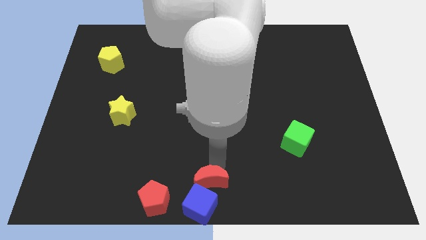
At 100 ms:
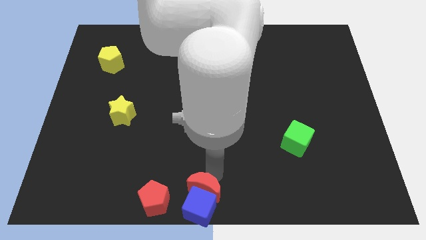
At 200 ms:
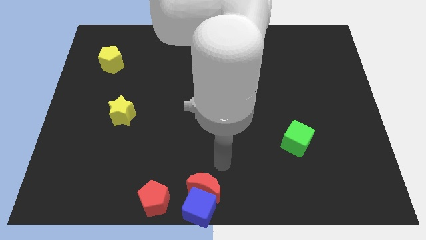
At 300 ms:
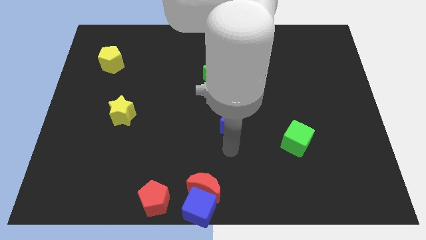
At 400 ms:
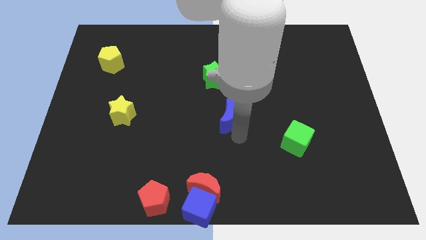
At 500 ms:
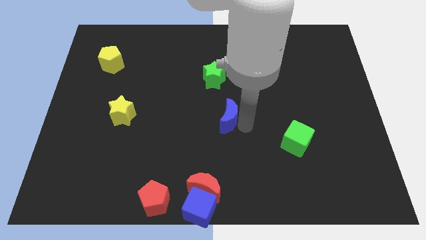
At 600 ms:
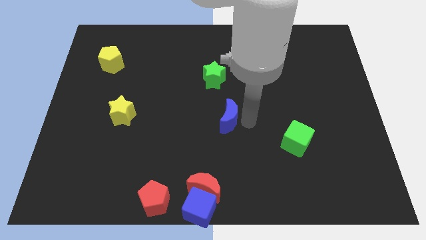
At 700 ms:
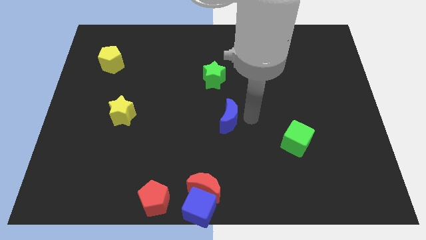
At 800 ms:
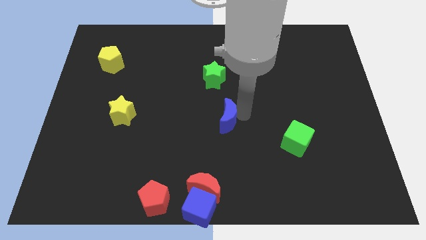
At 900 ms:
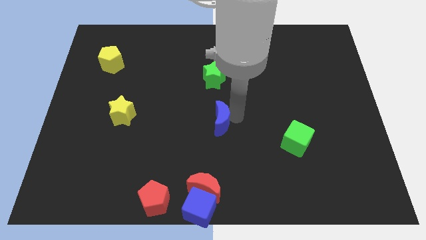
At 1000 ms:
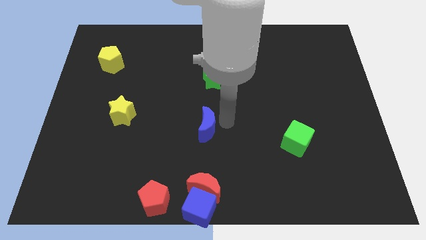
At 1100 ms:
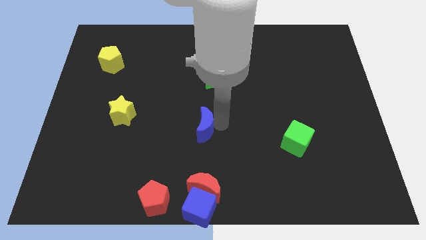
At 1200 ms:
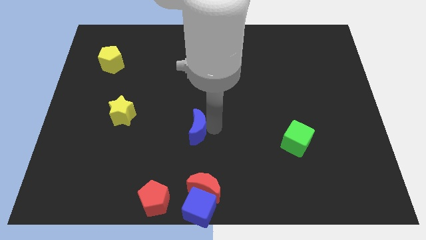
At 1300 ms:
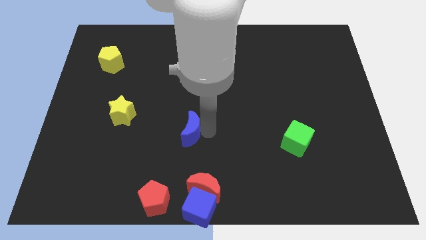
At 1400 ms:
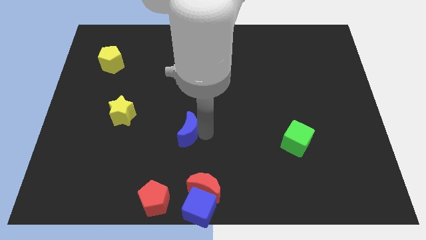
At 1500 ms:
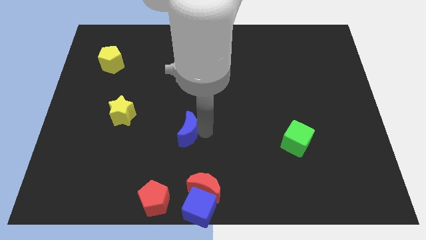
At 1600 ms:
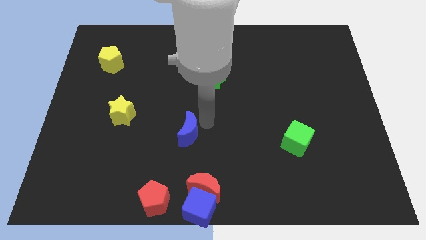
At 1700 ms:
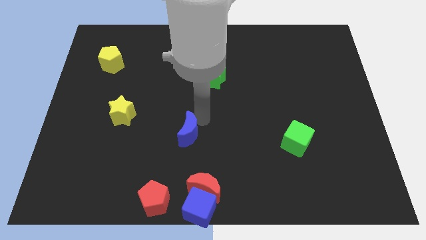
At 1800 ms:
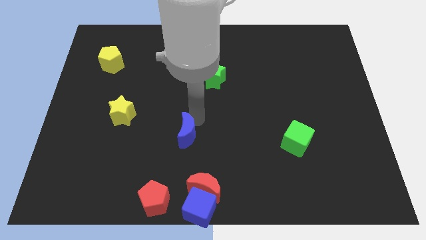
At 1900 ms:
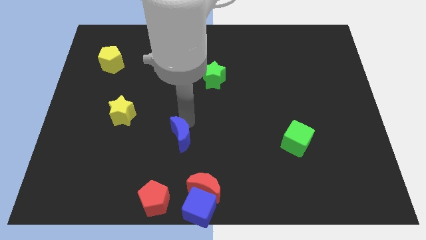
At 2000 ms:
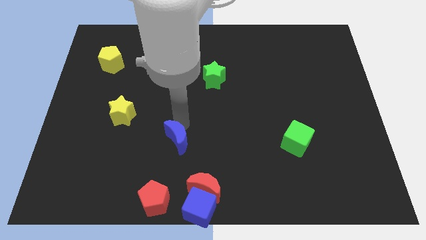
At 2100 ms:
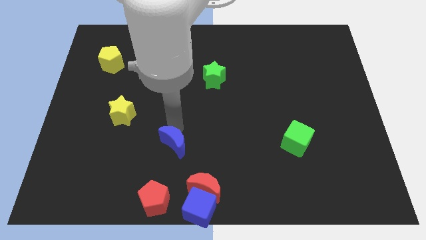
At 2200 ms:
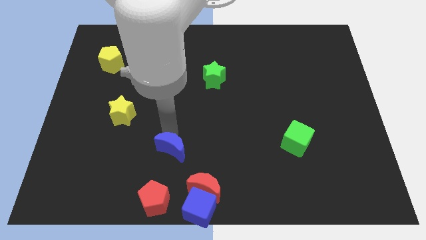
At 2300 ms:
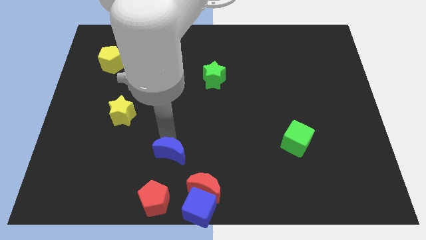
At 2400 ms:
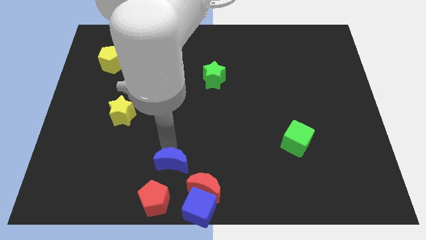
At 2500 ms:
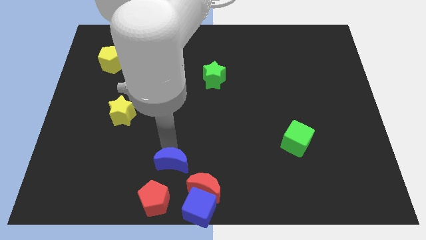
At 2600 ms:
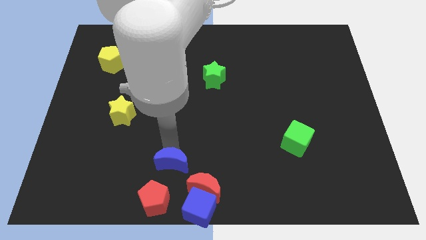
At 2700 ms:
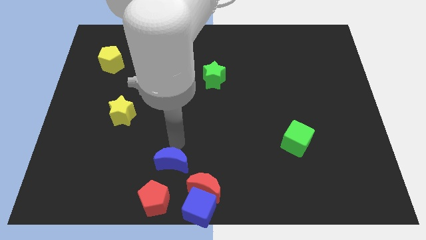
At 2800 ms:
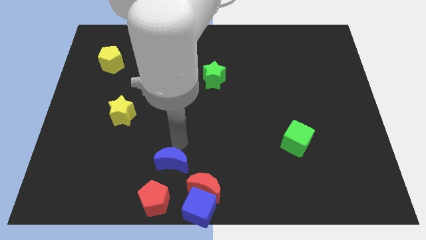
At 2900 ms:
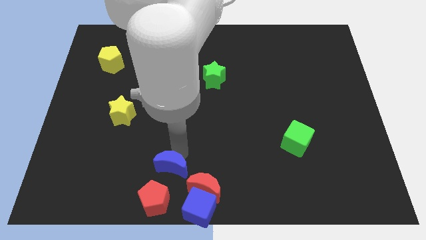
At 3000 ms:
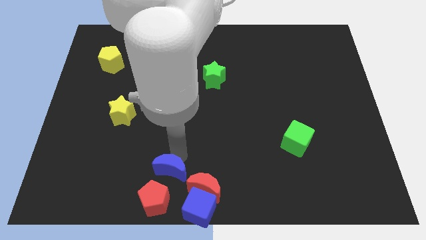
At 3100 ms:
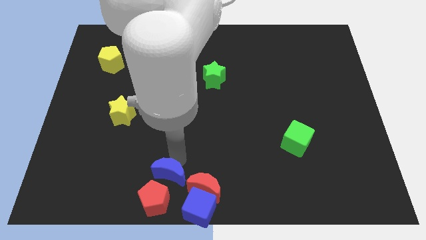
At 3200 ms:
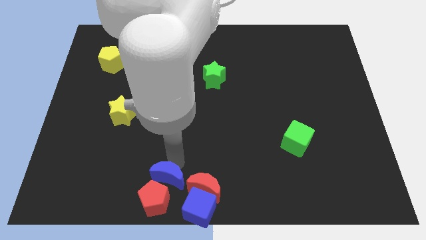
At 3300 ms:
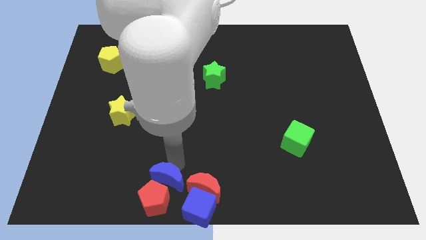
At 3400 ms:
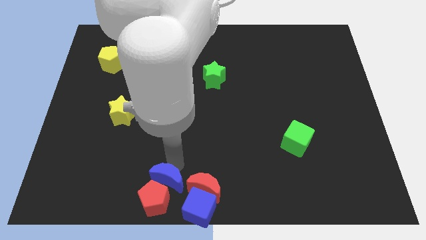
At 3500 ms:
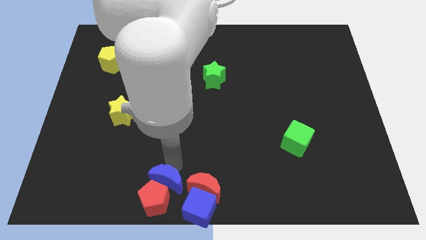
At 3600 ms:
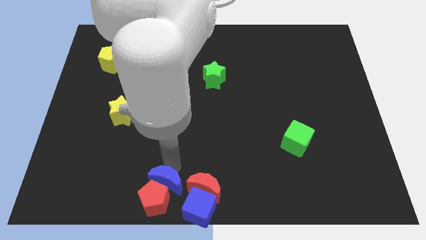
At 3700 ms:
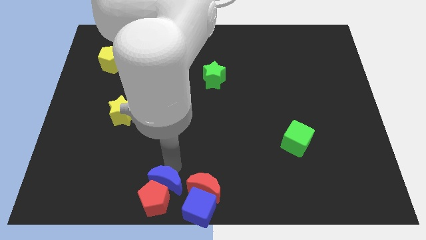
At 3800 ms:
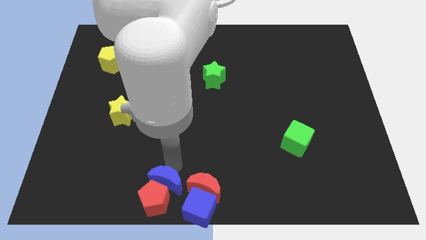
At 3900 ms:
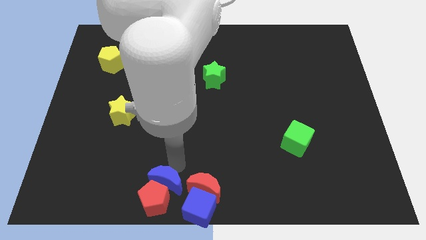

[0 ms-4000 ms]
push the blue crescent towards the red pentagon

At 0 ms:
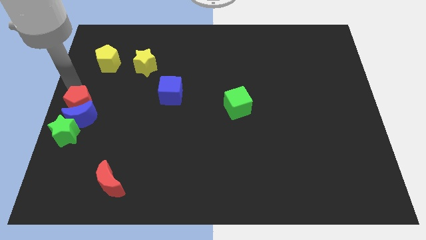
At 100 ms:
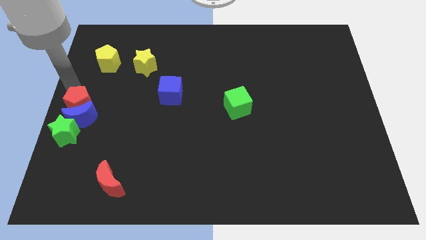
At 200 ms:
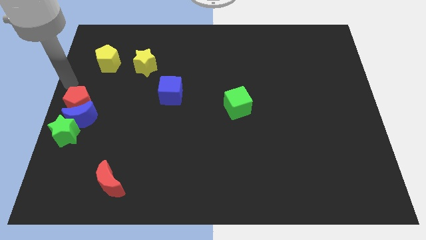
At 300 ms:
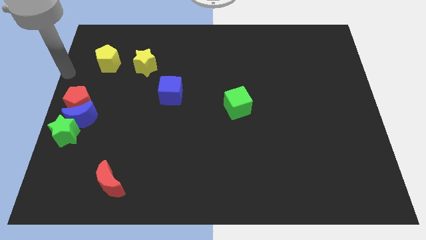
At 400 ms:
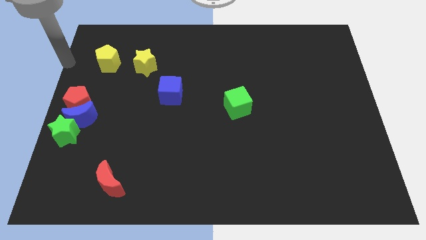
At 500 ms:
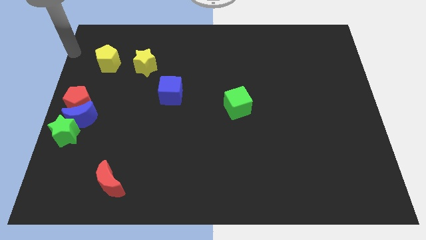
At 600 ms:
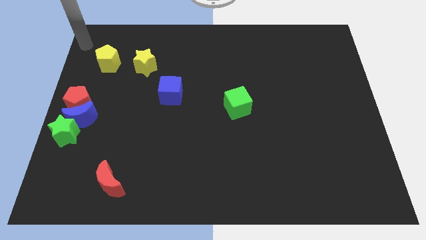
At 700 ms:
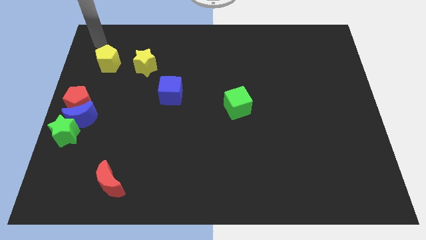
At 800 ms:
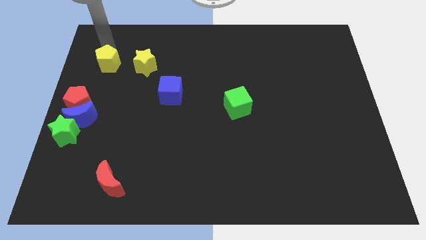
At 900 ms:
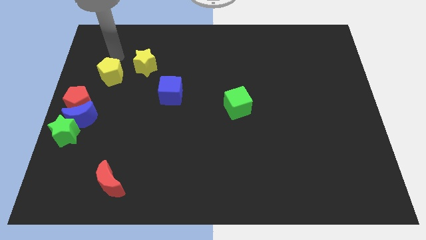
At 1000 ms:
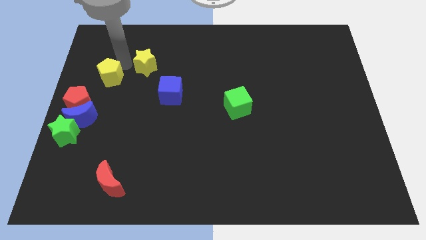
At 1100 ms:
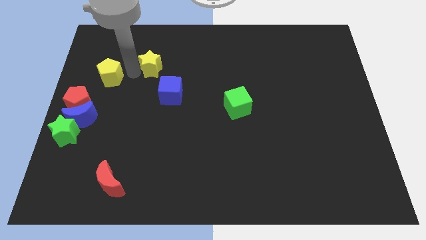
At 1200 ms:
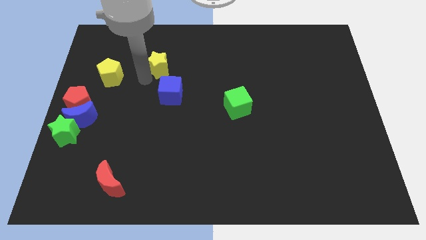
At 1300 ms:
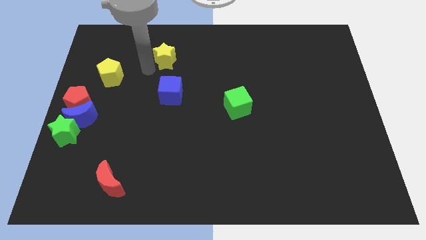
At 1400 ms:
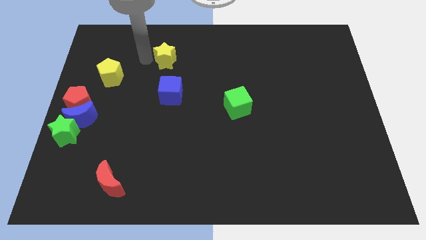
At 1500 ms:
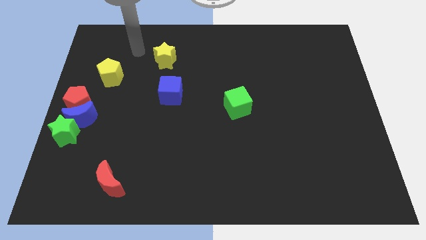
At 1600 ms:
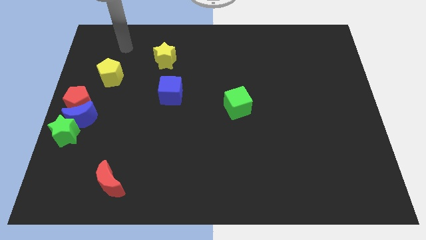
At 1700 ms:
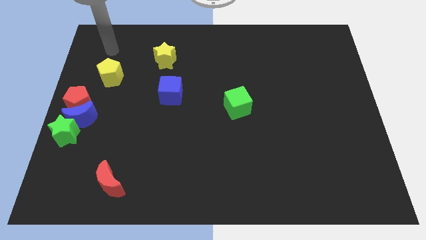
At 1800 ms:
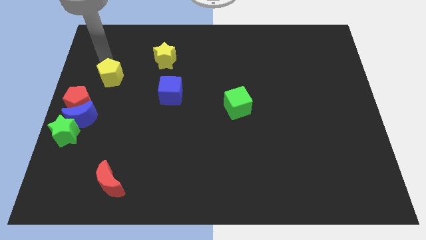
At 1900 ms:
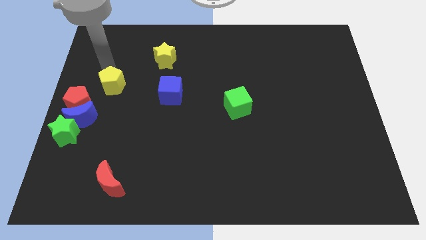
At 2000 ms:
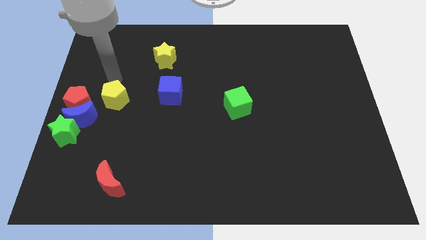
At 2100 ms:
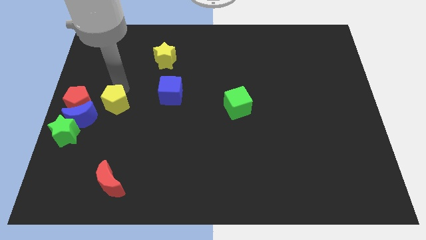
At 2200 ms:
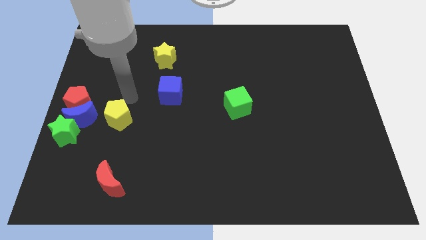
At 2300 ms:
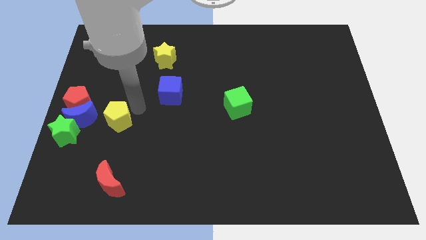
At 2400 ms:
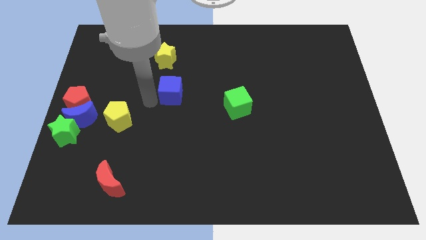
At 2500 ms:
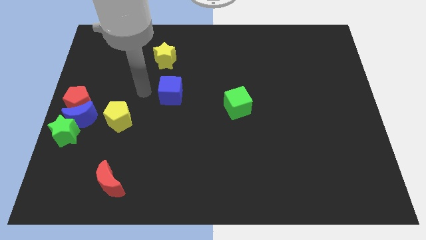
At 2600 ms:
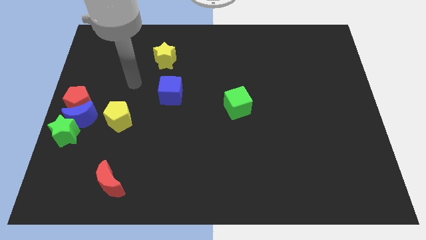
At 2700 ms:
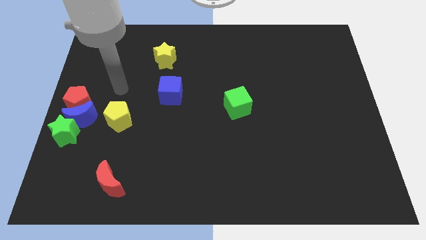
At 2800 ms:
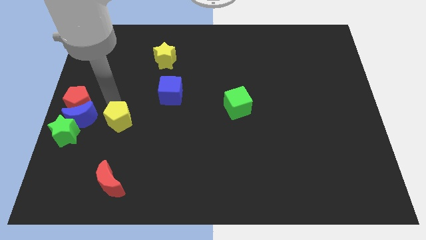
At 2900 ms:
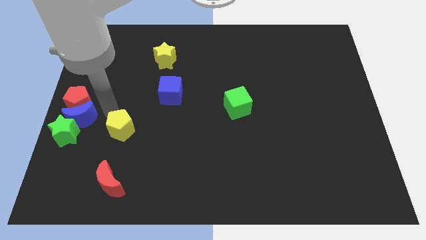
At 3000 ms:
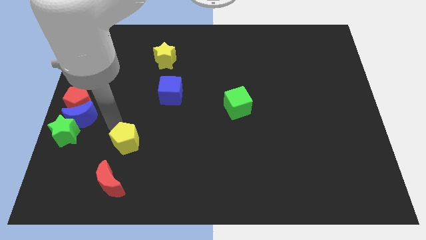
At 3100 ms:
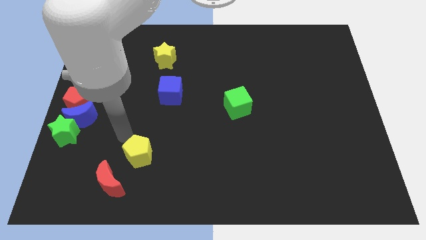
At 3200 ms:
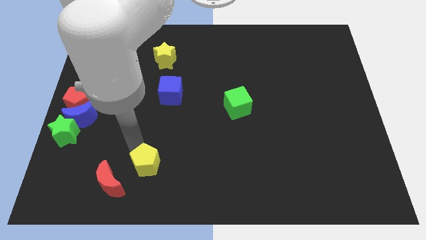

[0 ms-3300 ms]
place the yellow pentagon in between the green cube and red moon

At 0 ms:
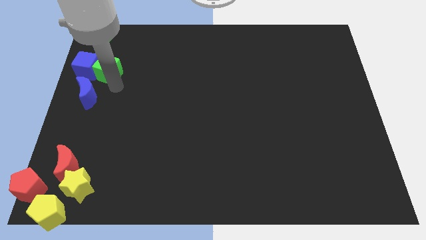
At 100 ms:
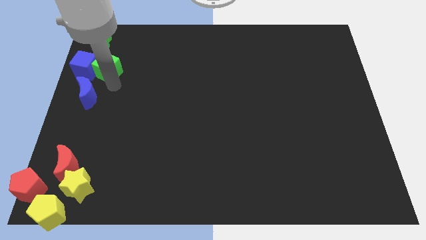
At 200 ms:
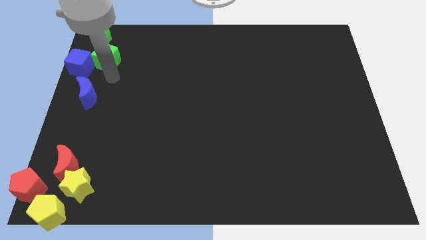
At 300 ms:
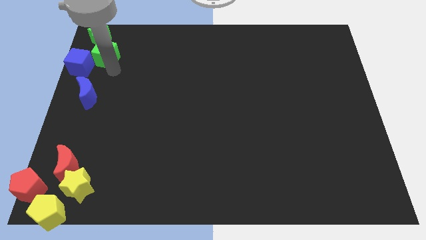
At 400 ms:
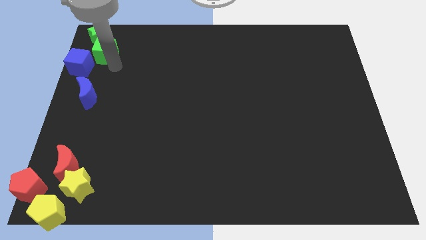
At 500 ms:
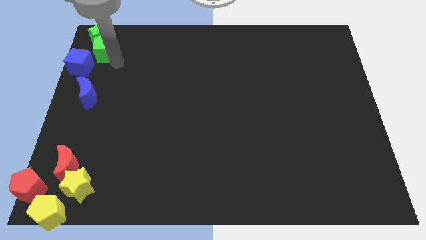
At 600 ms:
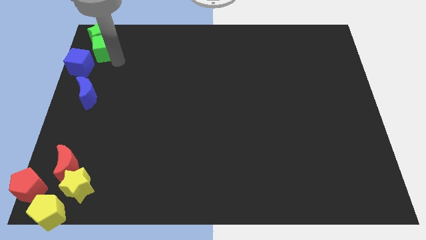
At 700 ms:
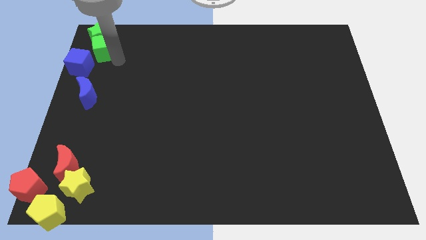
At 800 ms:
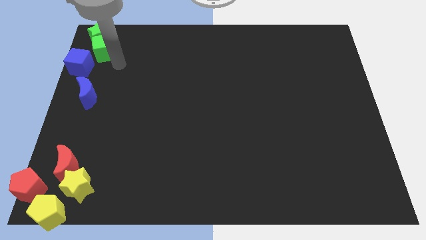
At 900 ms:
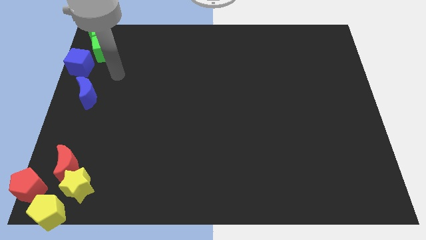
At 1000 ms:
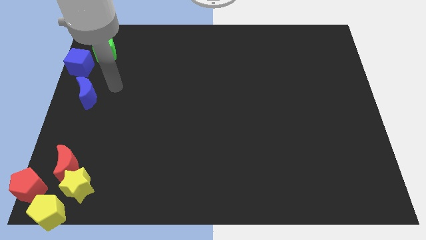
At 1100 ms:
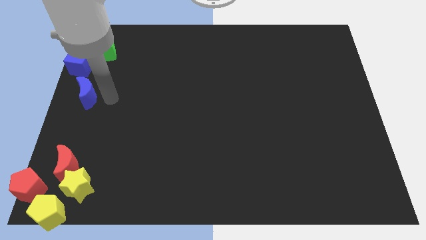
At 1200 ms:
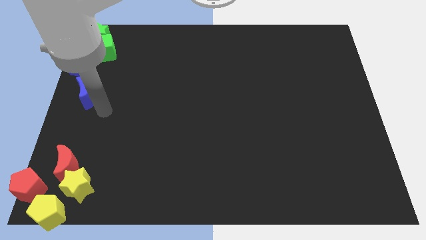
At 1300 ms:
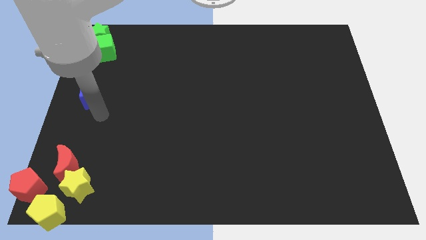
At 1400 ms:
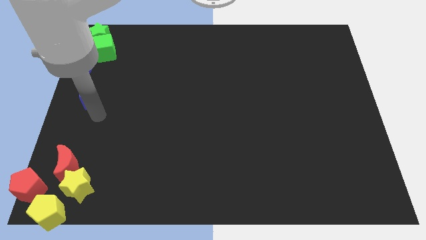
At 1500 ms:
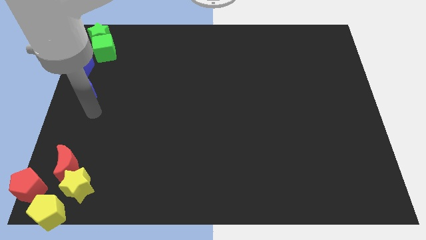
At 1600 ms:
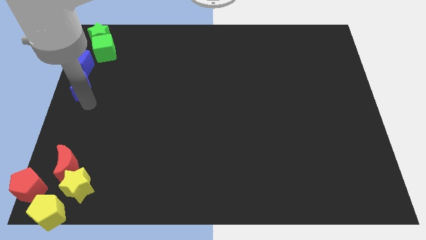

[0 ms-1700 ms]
place the green cube below the green star
